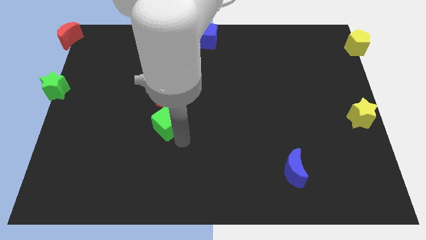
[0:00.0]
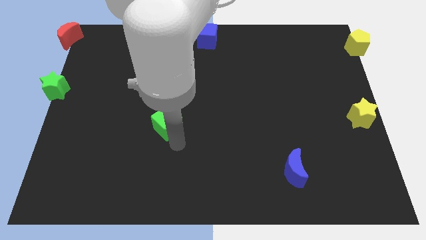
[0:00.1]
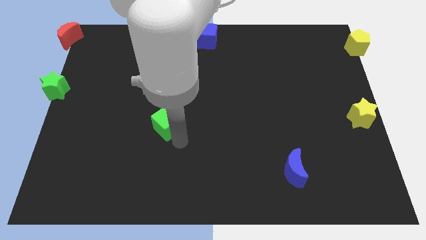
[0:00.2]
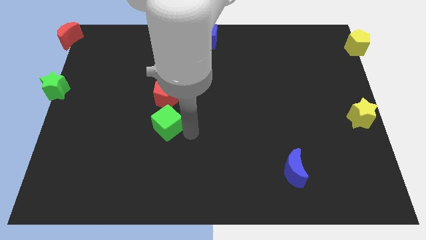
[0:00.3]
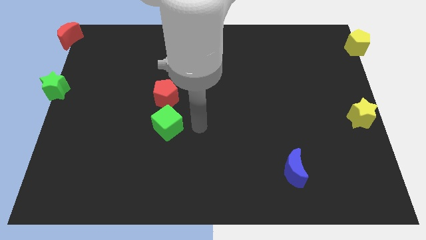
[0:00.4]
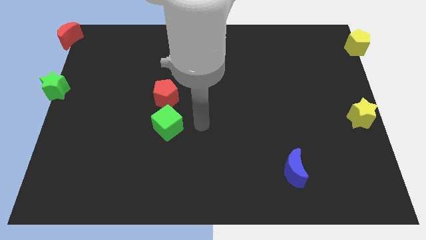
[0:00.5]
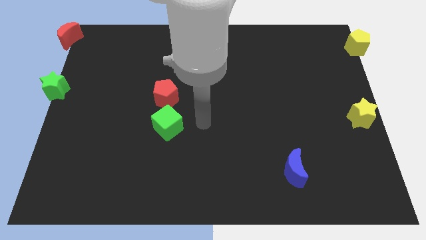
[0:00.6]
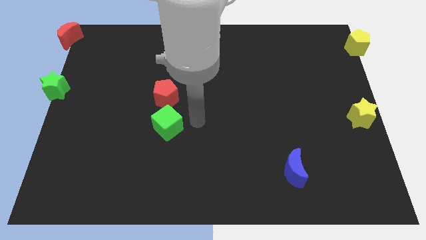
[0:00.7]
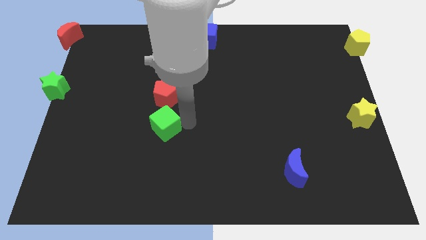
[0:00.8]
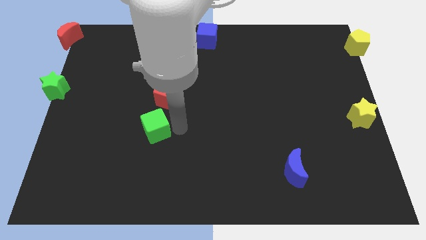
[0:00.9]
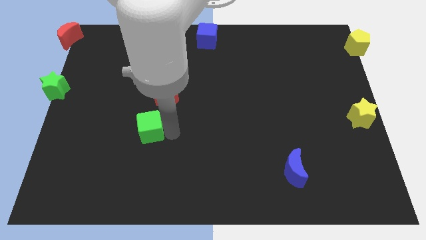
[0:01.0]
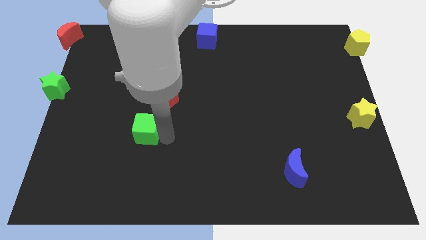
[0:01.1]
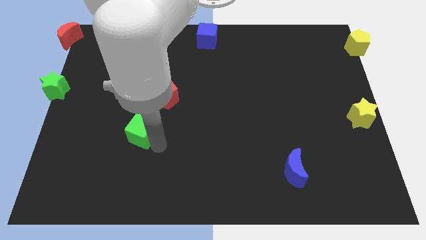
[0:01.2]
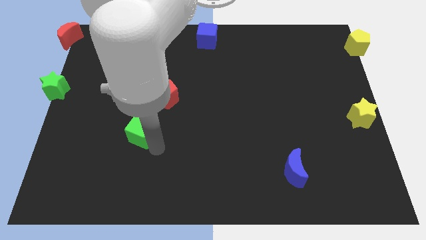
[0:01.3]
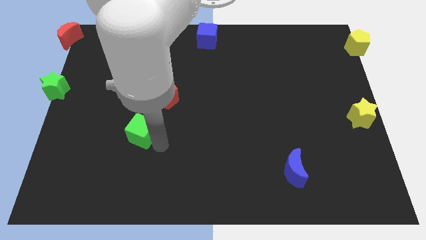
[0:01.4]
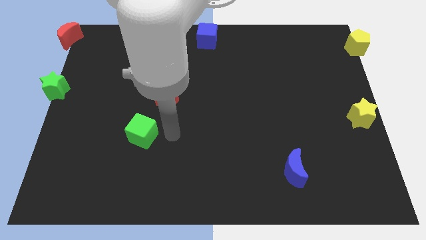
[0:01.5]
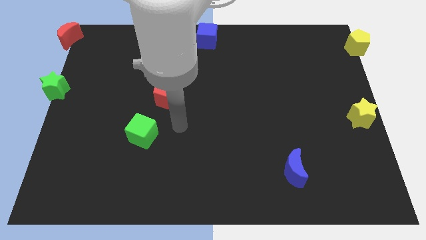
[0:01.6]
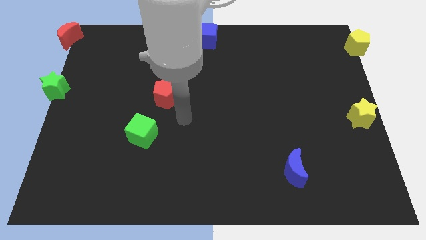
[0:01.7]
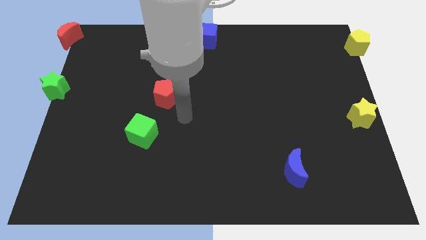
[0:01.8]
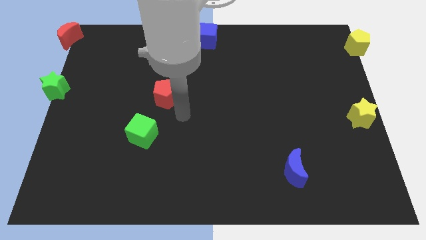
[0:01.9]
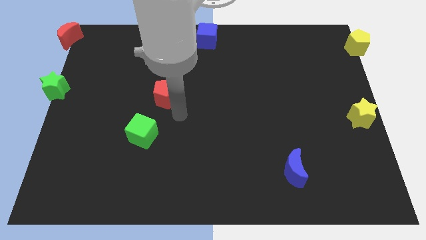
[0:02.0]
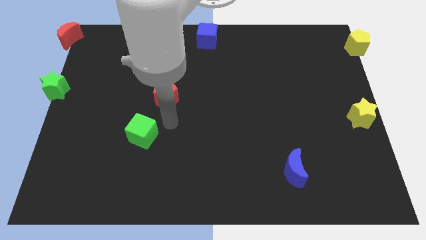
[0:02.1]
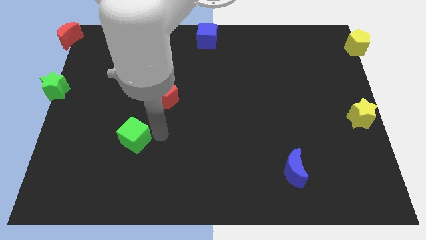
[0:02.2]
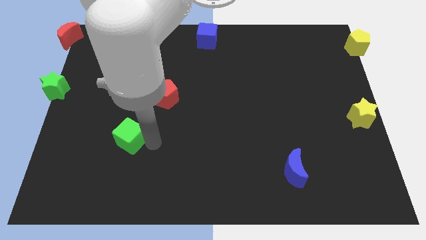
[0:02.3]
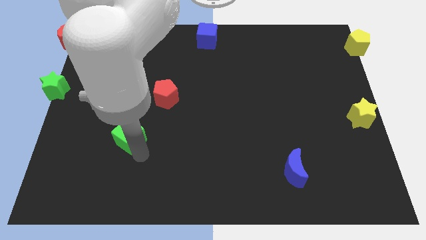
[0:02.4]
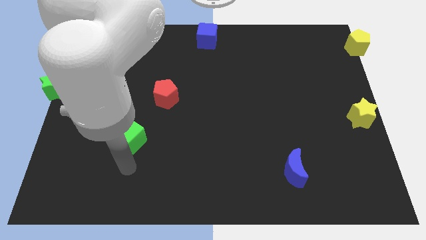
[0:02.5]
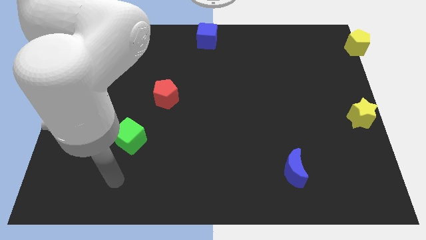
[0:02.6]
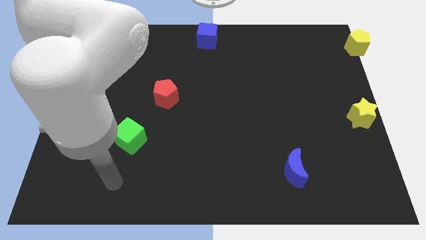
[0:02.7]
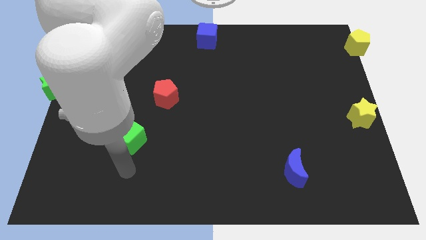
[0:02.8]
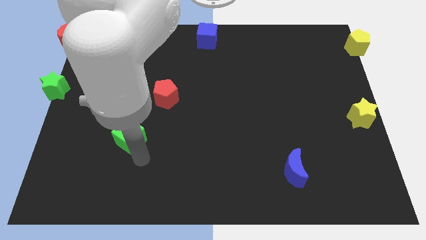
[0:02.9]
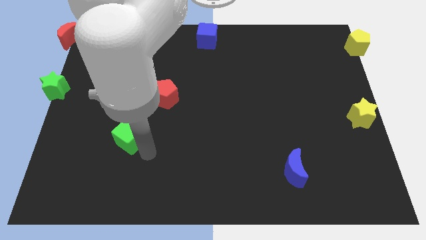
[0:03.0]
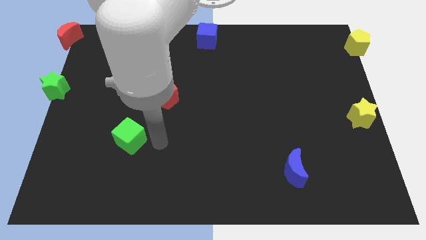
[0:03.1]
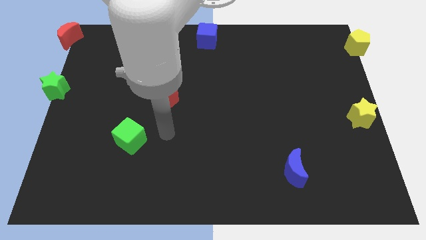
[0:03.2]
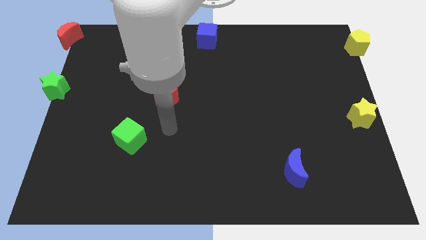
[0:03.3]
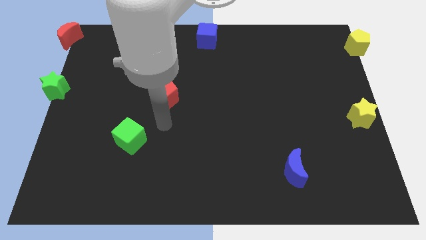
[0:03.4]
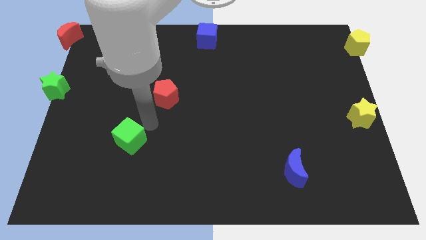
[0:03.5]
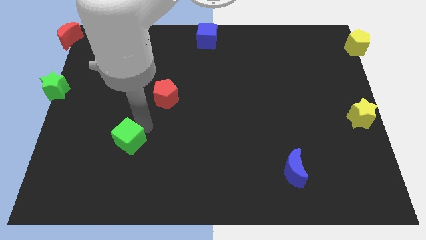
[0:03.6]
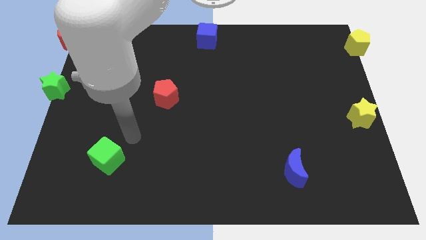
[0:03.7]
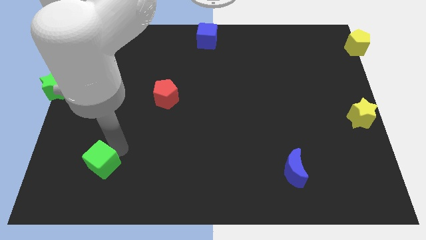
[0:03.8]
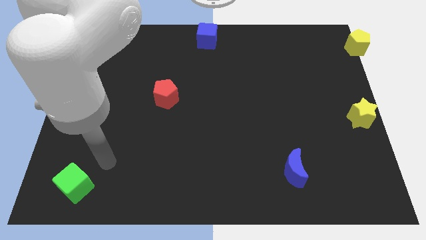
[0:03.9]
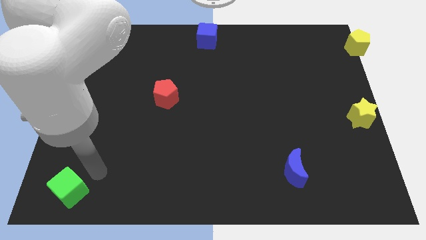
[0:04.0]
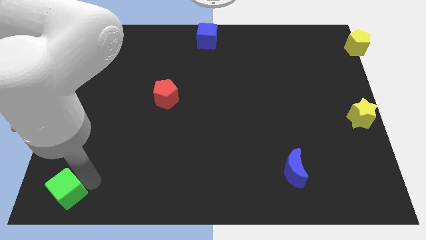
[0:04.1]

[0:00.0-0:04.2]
separate the green cube from the red pentagon

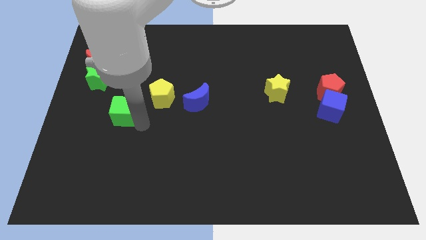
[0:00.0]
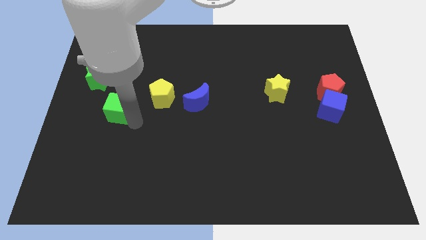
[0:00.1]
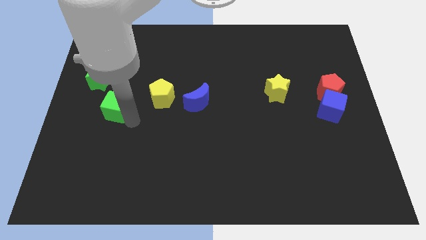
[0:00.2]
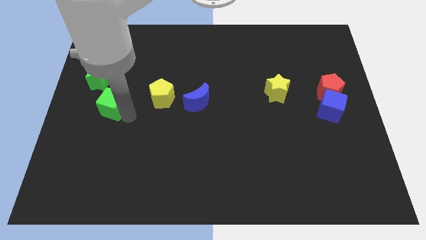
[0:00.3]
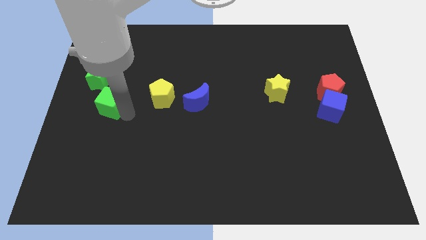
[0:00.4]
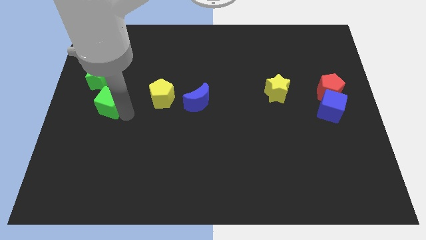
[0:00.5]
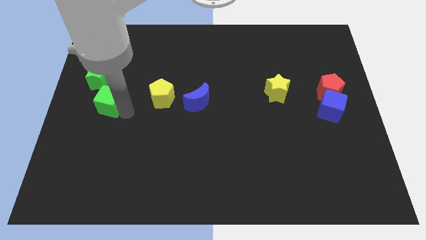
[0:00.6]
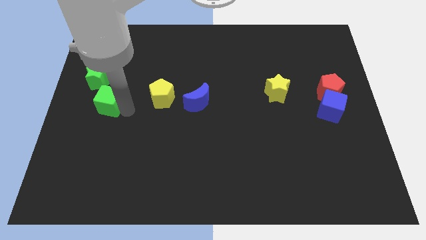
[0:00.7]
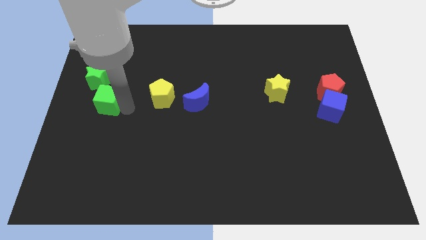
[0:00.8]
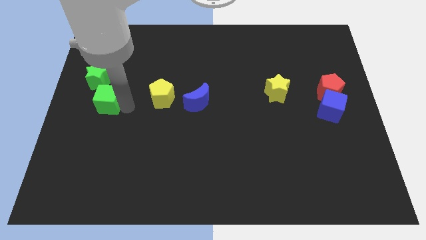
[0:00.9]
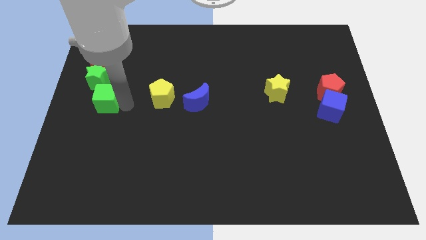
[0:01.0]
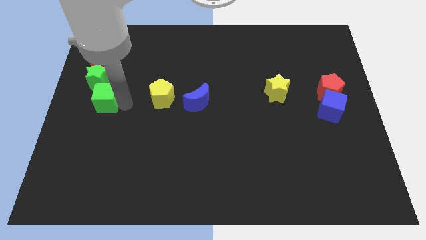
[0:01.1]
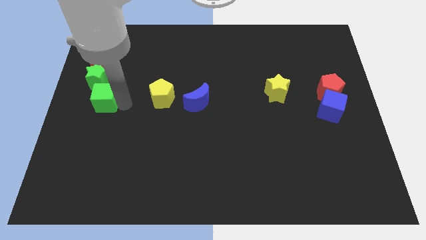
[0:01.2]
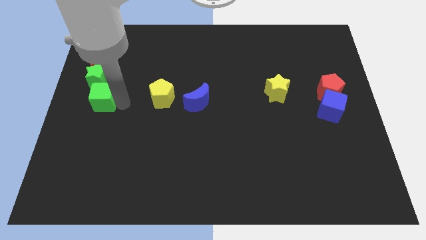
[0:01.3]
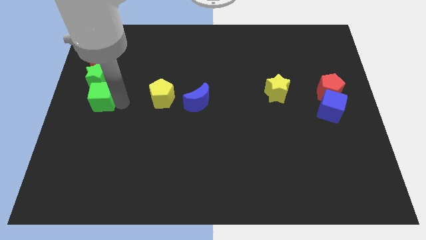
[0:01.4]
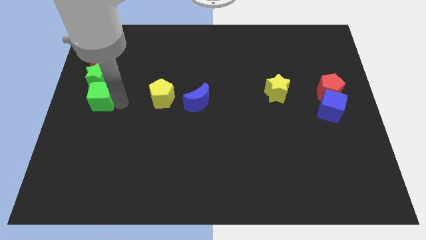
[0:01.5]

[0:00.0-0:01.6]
place the green cube below the green star

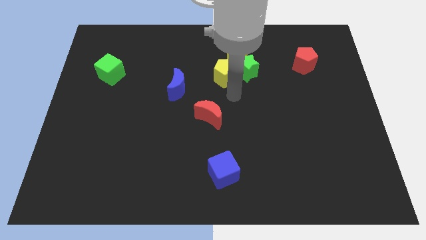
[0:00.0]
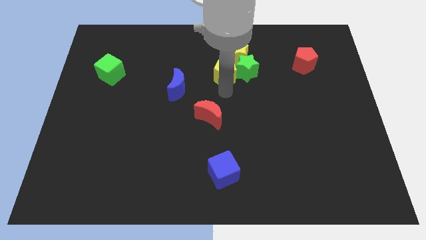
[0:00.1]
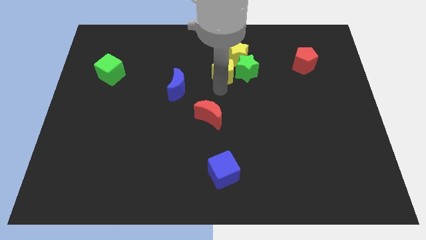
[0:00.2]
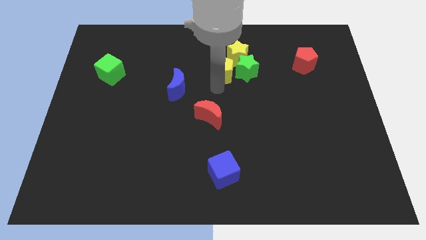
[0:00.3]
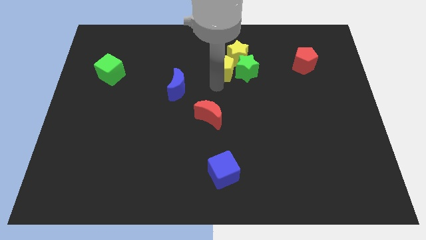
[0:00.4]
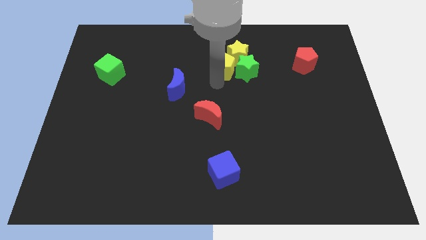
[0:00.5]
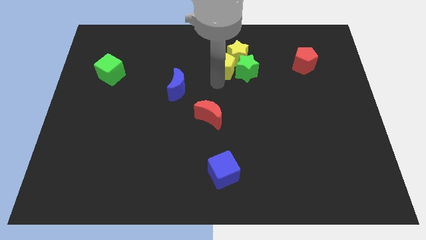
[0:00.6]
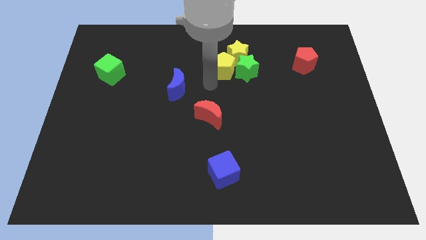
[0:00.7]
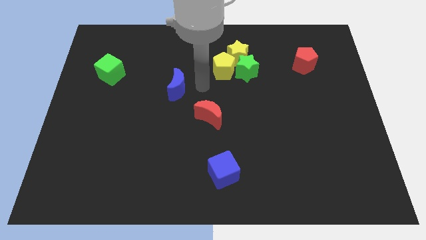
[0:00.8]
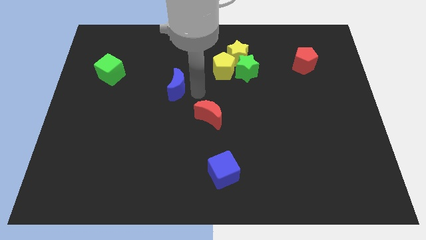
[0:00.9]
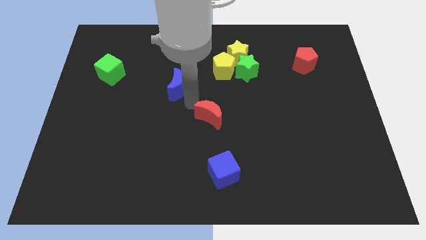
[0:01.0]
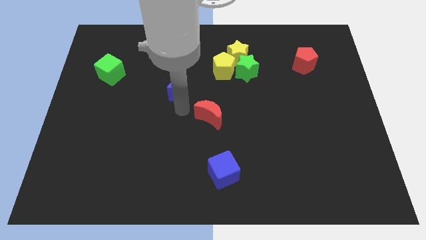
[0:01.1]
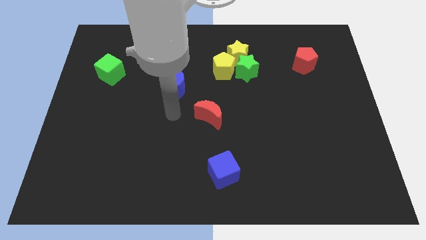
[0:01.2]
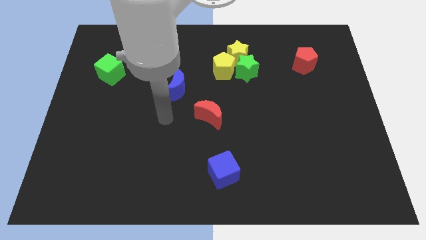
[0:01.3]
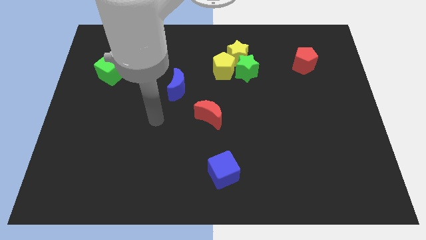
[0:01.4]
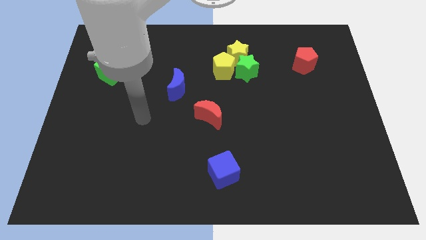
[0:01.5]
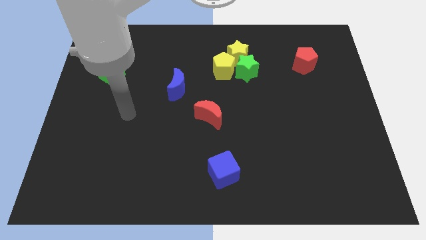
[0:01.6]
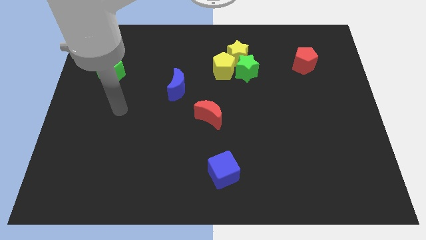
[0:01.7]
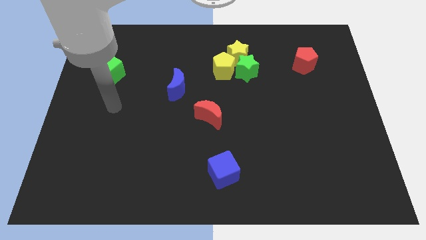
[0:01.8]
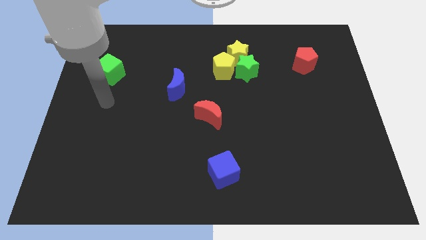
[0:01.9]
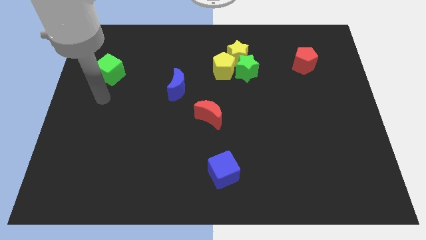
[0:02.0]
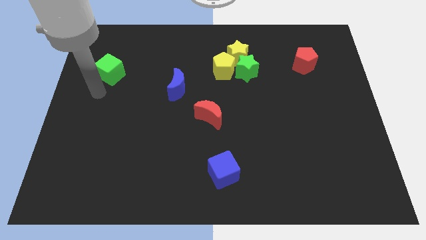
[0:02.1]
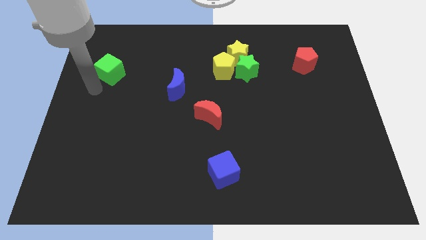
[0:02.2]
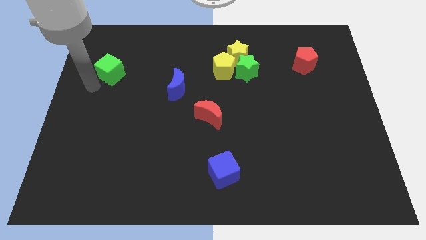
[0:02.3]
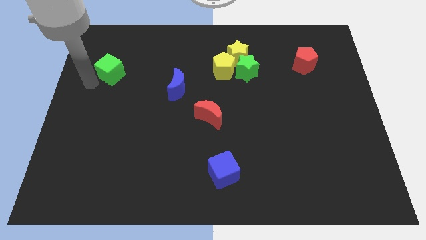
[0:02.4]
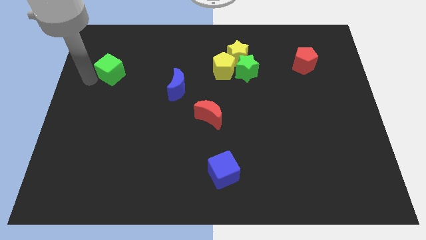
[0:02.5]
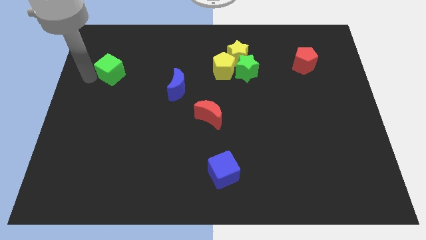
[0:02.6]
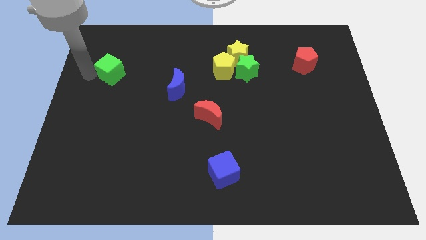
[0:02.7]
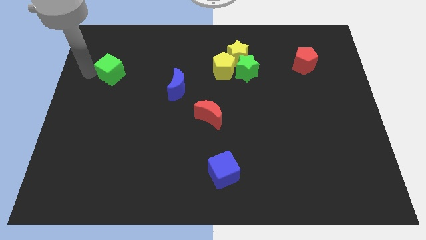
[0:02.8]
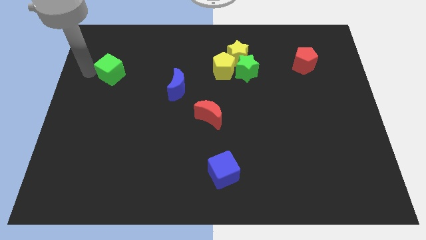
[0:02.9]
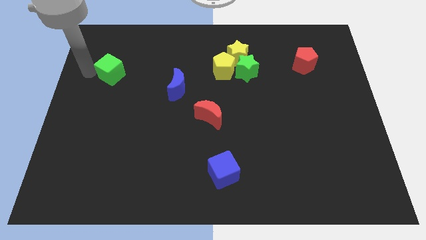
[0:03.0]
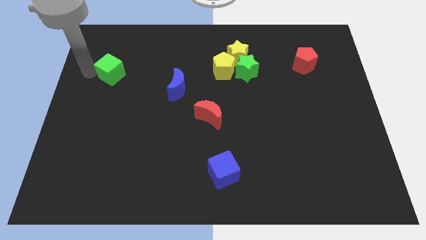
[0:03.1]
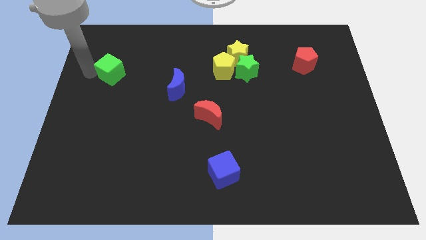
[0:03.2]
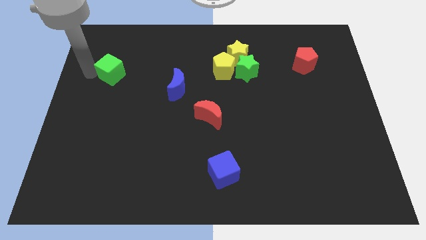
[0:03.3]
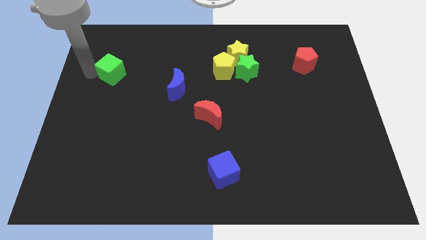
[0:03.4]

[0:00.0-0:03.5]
move your arm to the left of the green cube
